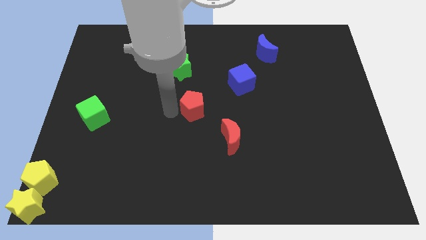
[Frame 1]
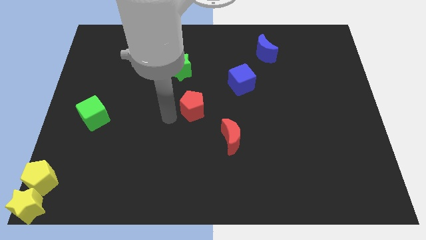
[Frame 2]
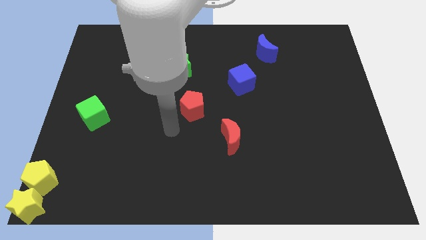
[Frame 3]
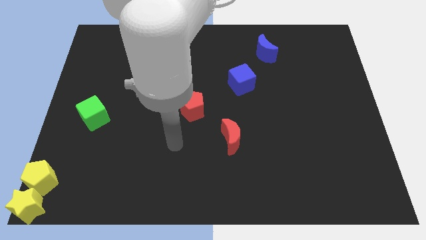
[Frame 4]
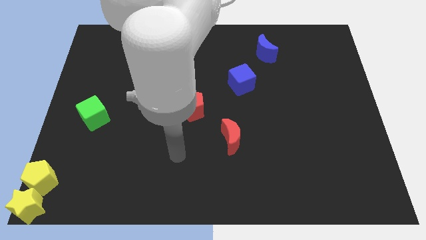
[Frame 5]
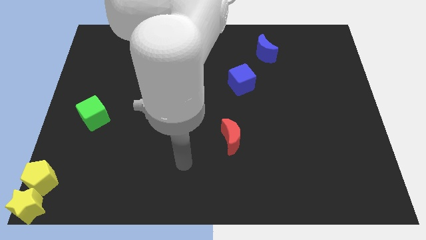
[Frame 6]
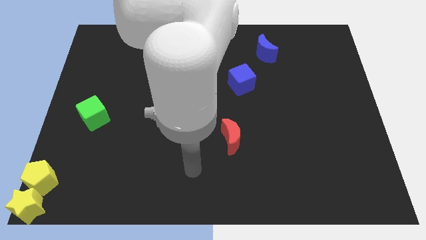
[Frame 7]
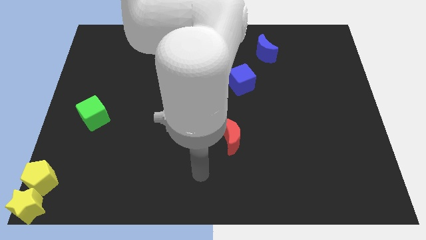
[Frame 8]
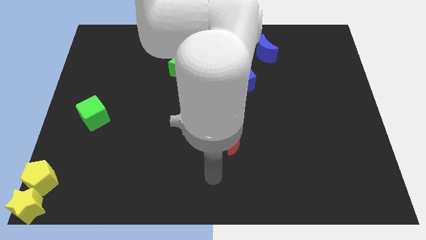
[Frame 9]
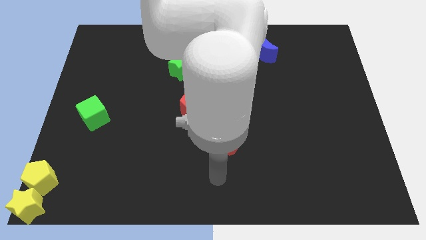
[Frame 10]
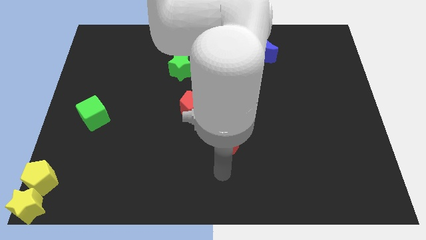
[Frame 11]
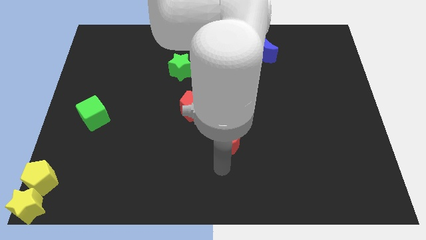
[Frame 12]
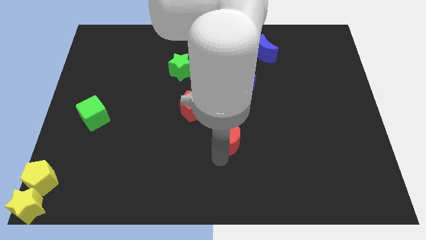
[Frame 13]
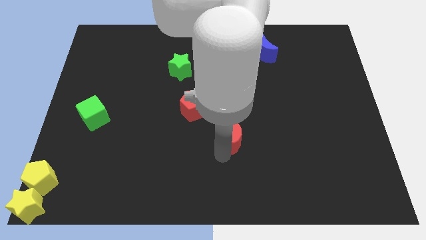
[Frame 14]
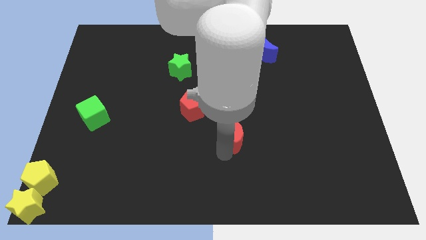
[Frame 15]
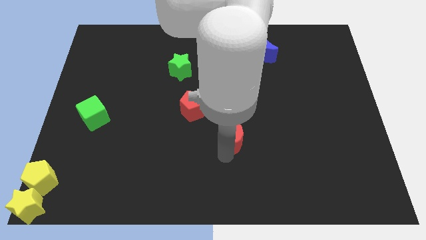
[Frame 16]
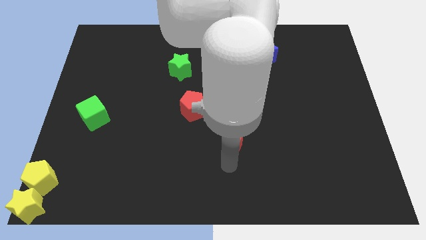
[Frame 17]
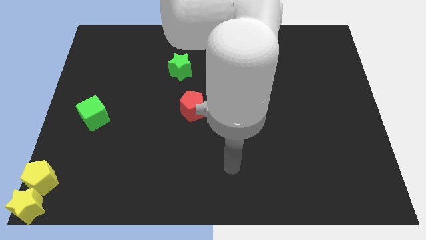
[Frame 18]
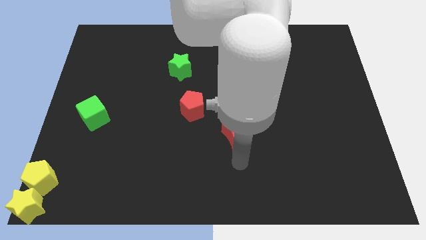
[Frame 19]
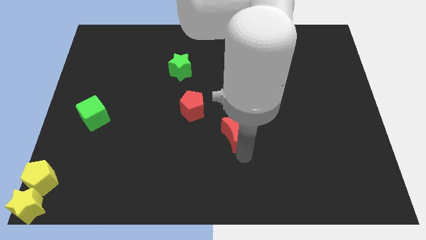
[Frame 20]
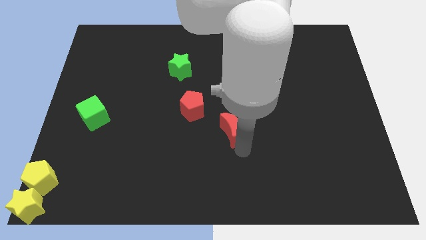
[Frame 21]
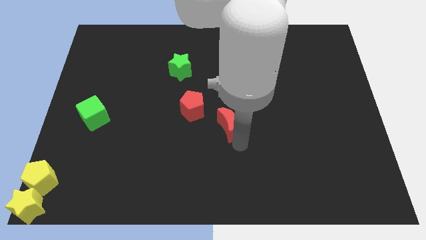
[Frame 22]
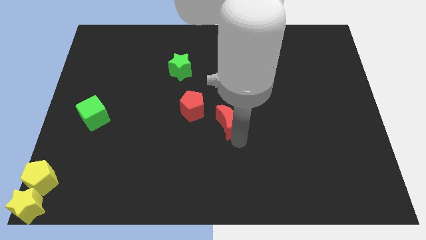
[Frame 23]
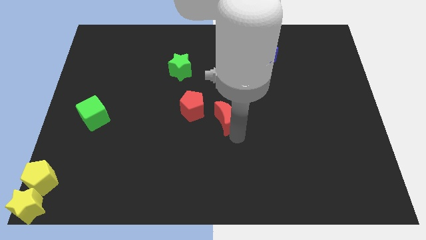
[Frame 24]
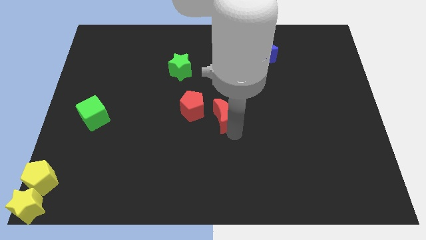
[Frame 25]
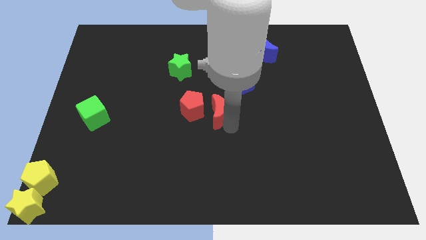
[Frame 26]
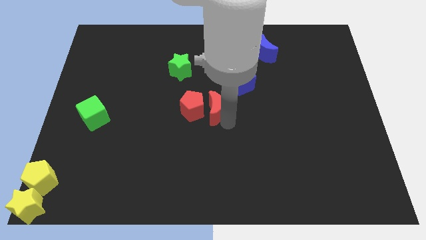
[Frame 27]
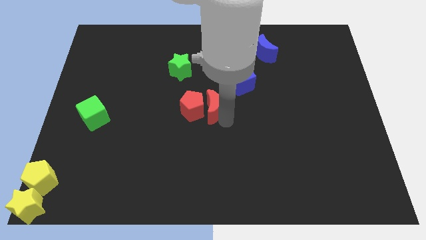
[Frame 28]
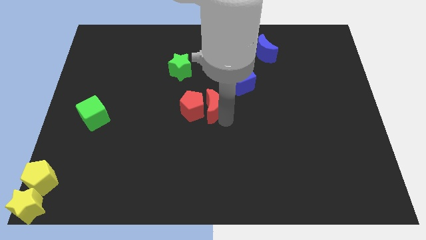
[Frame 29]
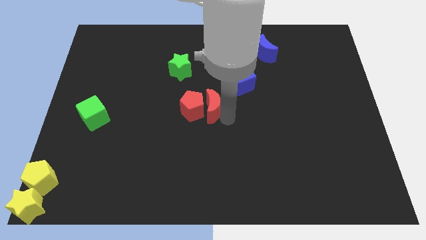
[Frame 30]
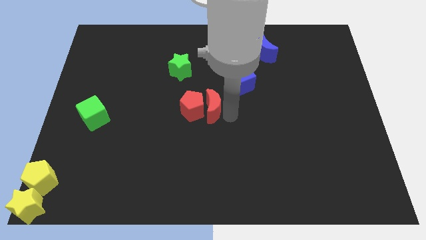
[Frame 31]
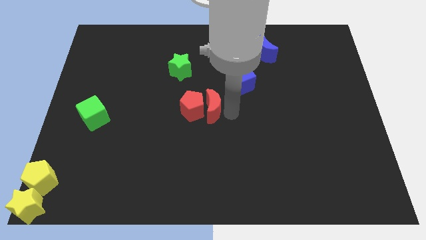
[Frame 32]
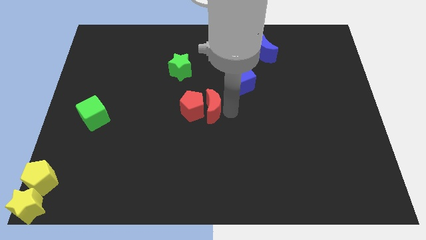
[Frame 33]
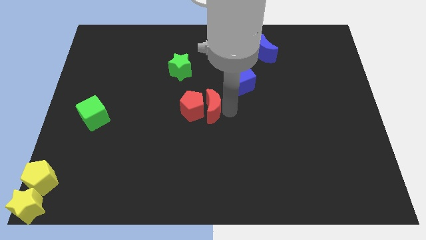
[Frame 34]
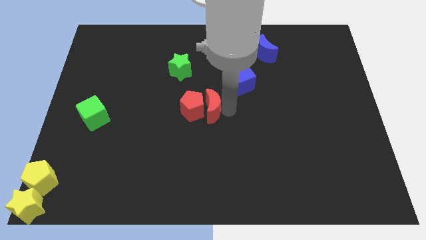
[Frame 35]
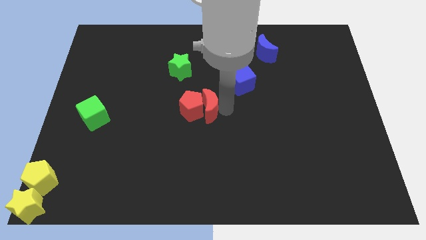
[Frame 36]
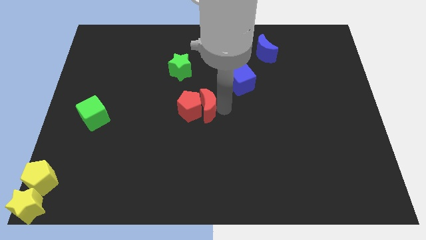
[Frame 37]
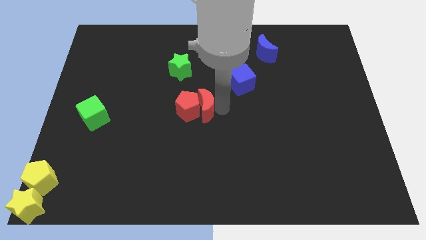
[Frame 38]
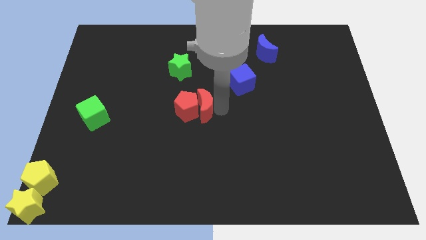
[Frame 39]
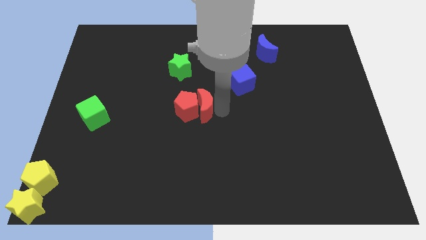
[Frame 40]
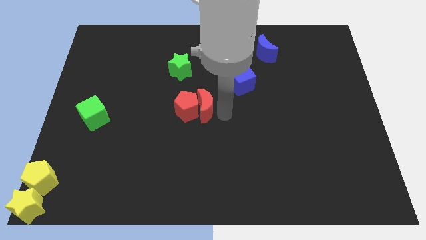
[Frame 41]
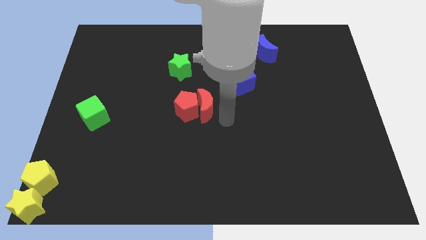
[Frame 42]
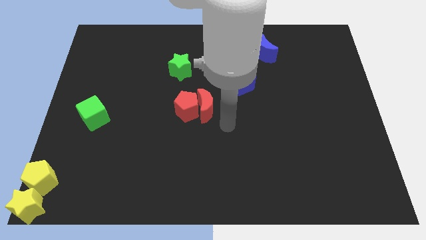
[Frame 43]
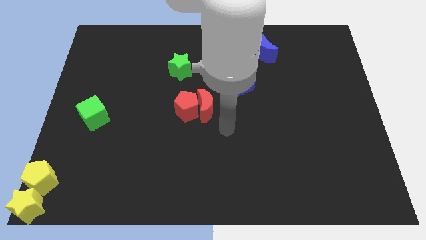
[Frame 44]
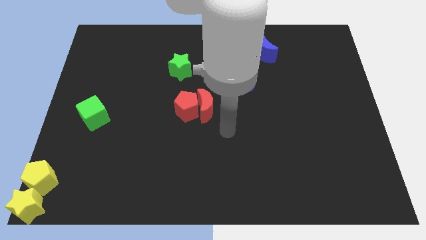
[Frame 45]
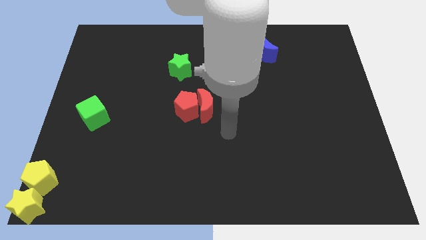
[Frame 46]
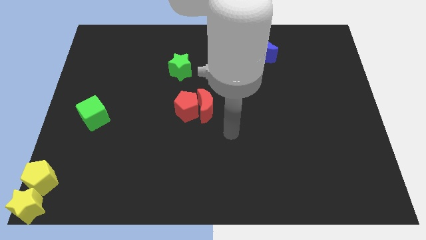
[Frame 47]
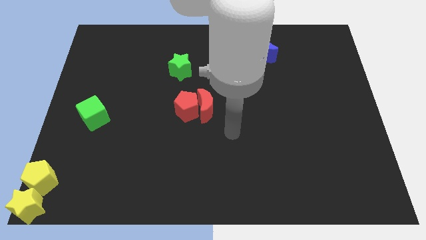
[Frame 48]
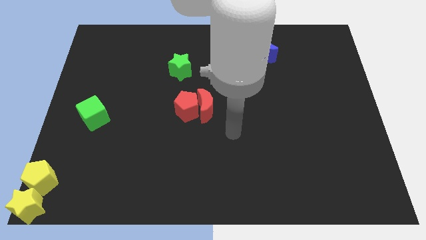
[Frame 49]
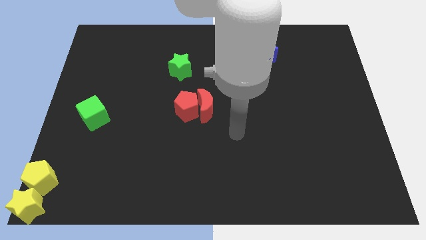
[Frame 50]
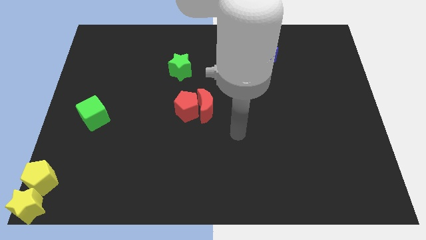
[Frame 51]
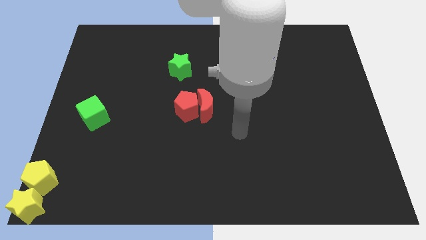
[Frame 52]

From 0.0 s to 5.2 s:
push the red moon into the red pentagon

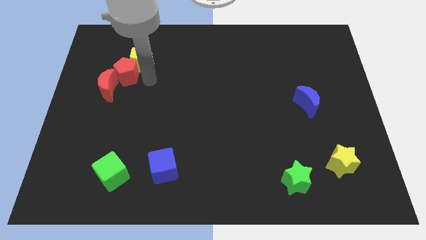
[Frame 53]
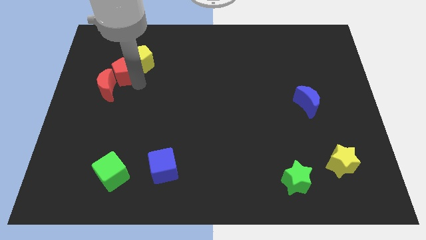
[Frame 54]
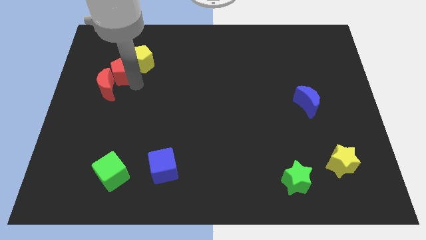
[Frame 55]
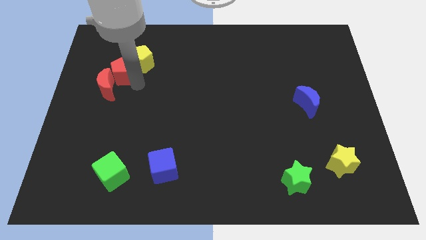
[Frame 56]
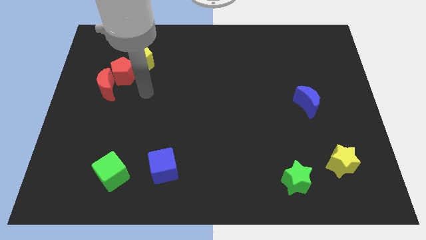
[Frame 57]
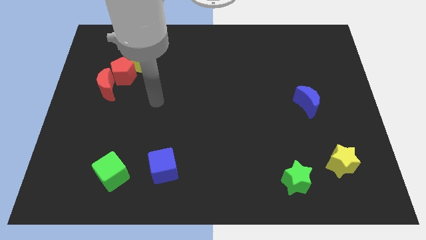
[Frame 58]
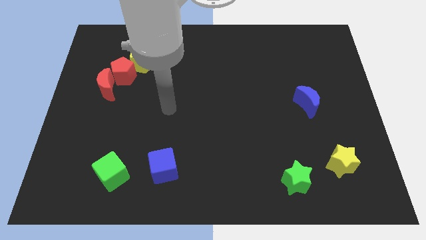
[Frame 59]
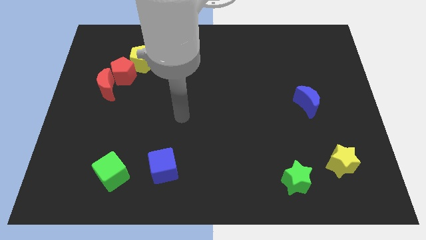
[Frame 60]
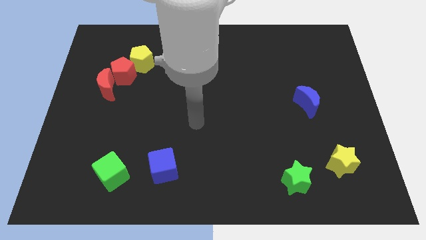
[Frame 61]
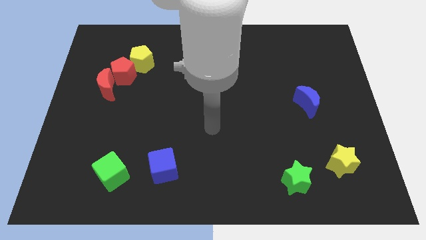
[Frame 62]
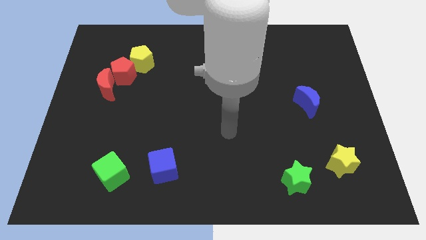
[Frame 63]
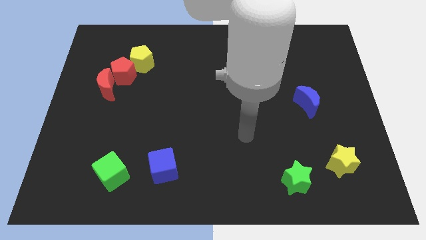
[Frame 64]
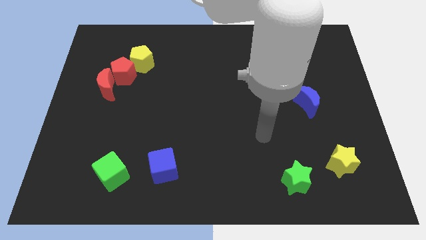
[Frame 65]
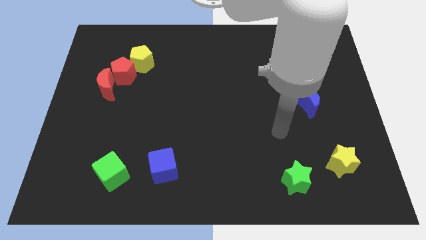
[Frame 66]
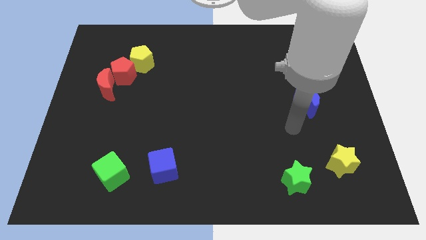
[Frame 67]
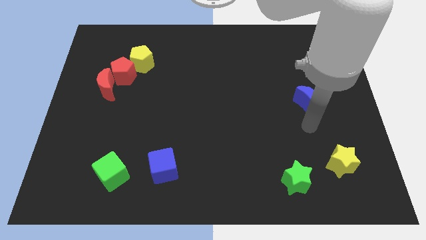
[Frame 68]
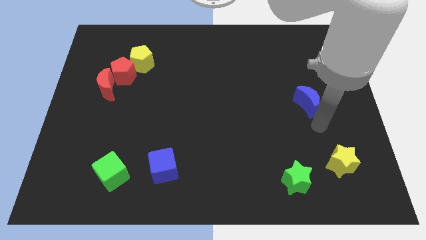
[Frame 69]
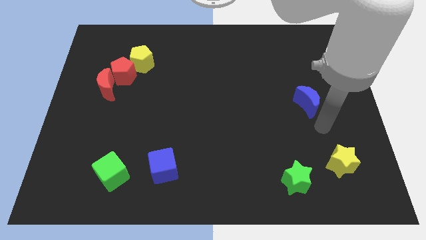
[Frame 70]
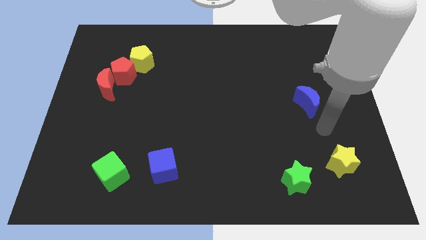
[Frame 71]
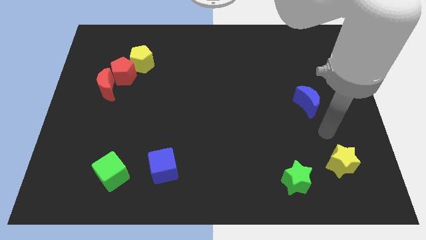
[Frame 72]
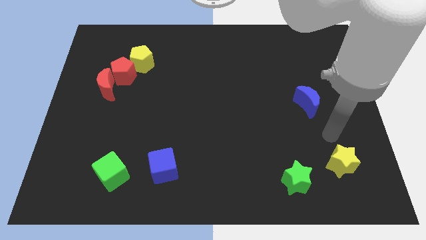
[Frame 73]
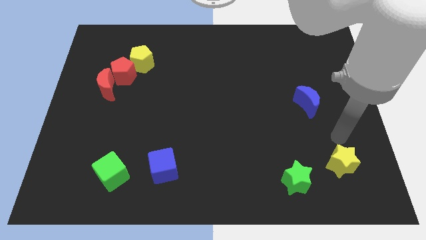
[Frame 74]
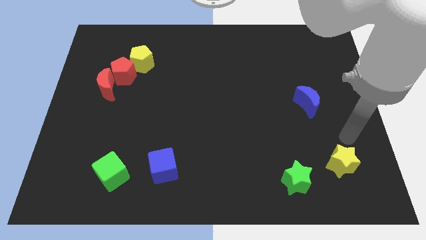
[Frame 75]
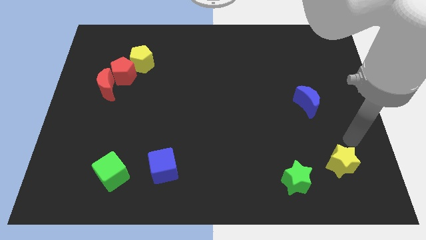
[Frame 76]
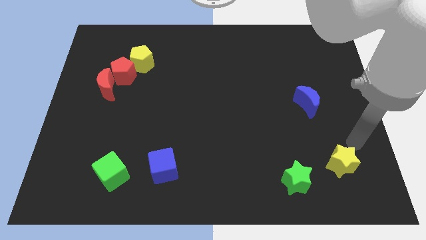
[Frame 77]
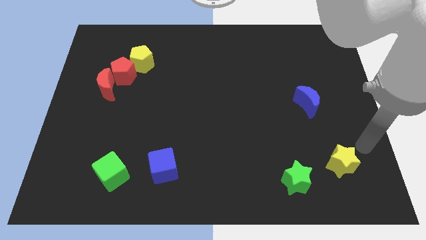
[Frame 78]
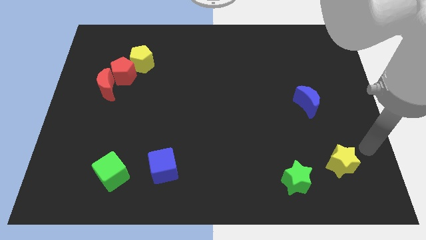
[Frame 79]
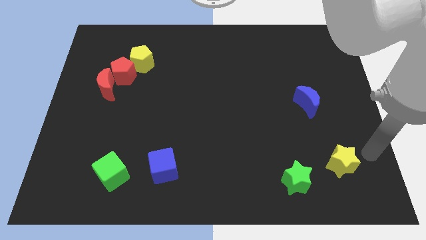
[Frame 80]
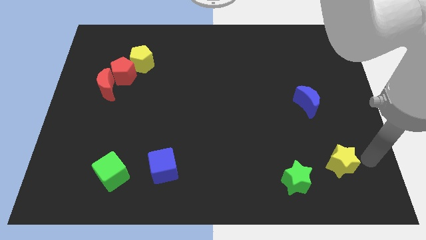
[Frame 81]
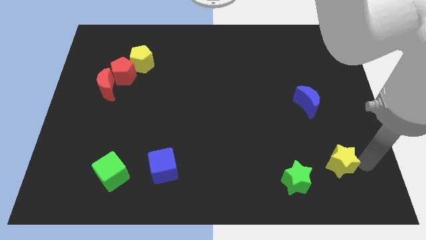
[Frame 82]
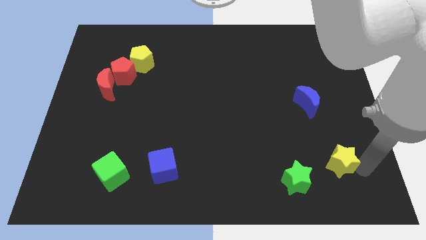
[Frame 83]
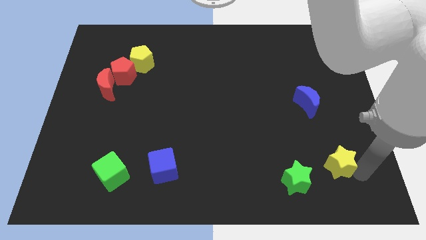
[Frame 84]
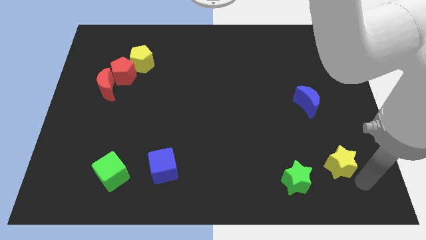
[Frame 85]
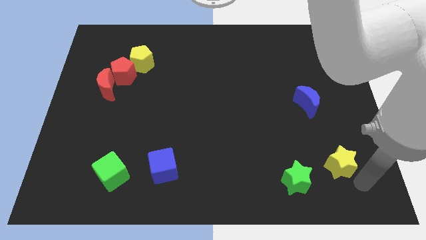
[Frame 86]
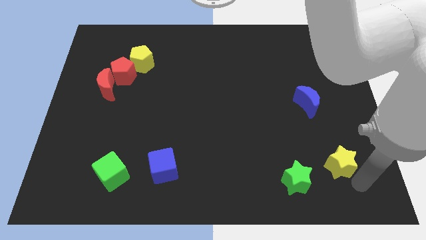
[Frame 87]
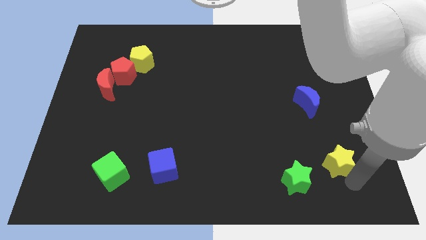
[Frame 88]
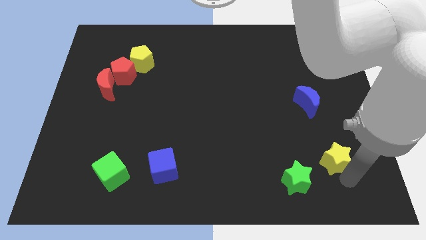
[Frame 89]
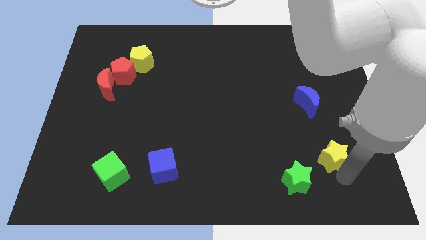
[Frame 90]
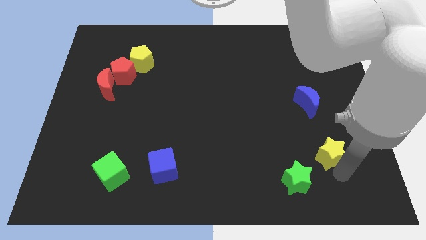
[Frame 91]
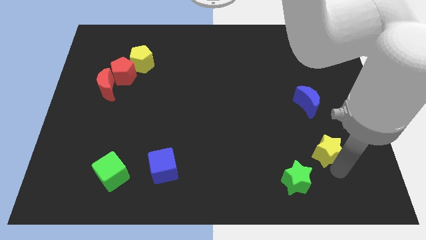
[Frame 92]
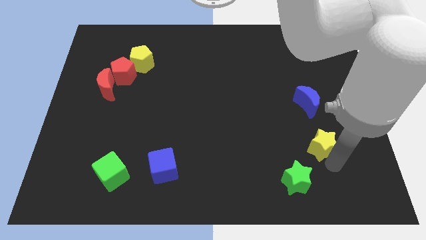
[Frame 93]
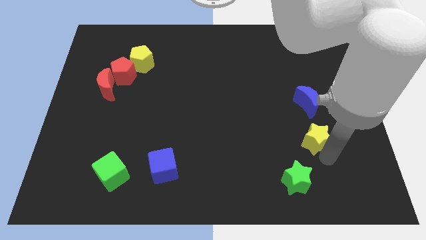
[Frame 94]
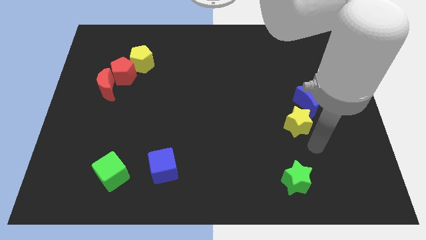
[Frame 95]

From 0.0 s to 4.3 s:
move the yellow star slightly up
